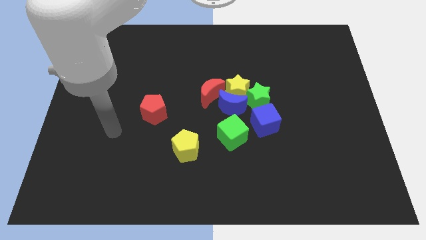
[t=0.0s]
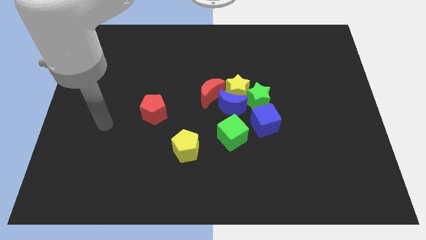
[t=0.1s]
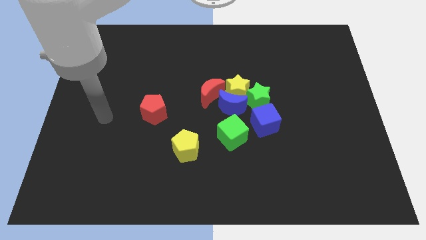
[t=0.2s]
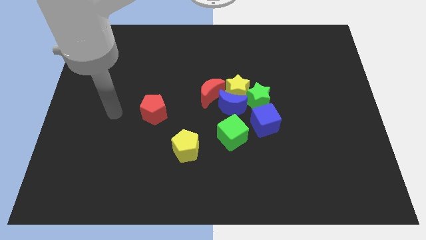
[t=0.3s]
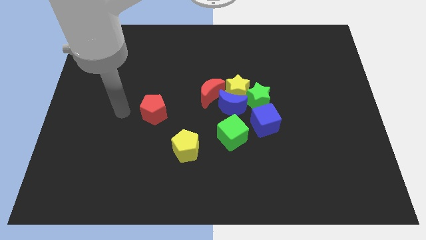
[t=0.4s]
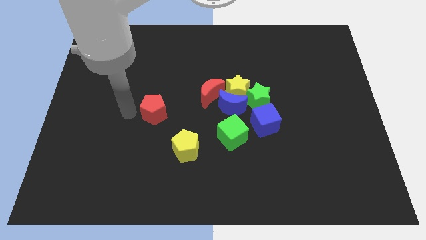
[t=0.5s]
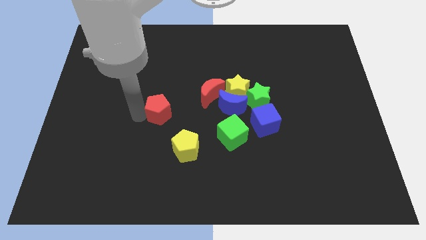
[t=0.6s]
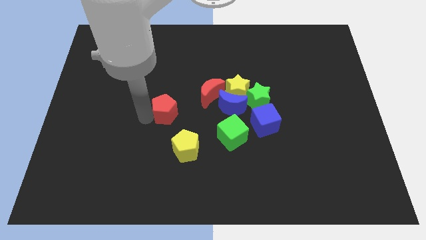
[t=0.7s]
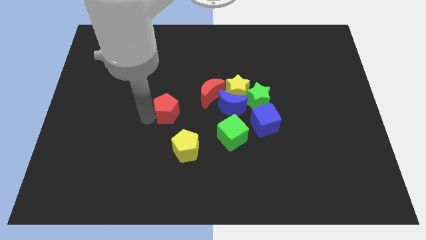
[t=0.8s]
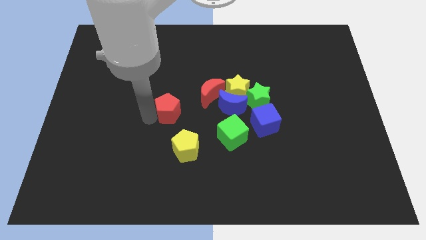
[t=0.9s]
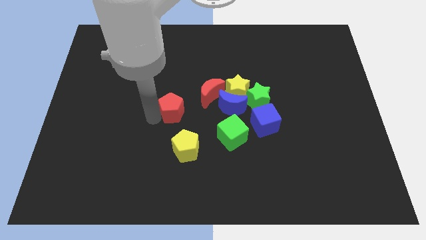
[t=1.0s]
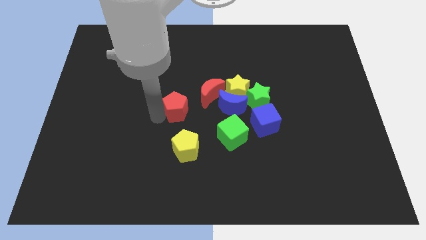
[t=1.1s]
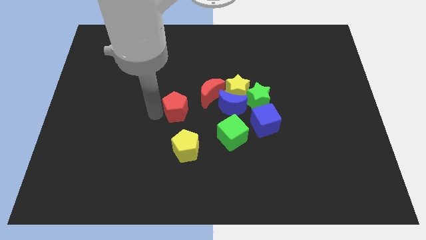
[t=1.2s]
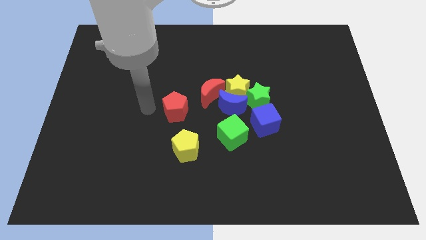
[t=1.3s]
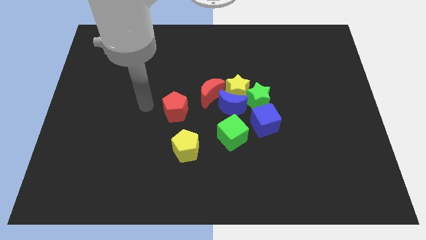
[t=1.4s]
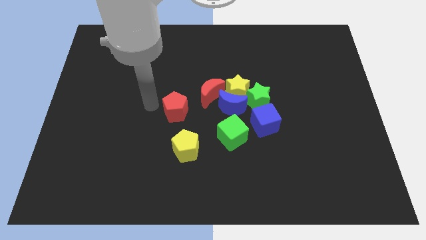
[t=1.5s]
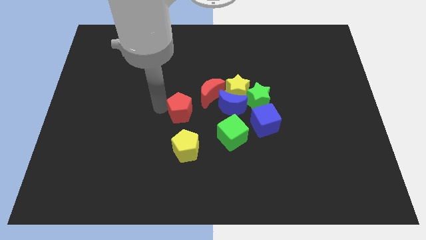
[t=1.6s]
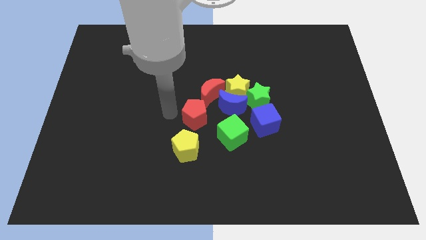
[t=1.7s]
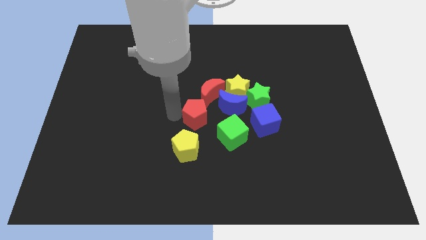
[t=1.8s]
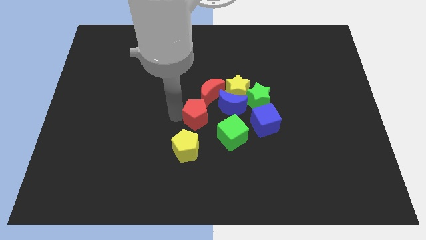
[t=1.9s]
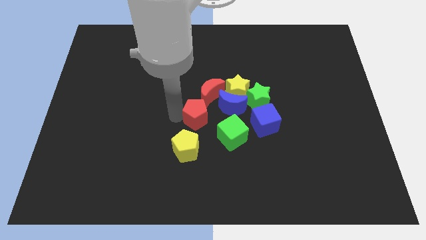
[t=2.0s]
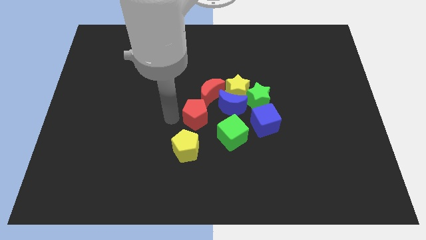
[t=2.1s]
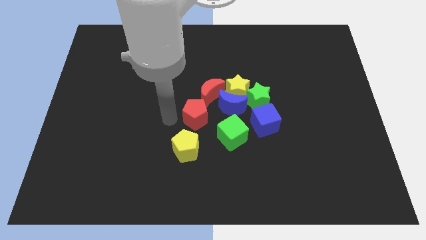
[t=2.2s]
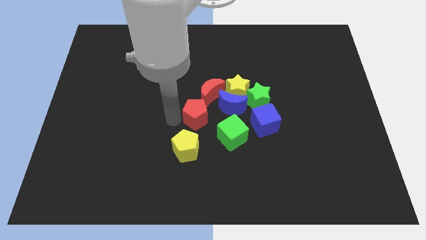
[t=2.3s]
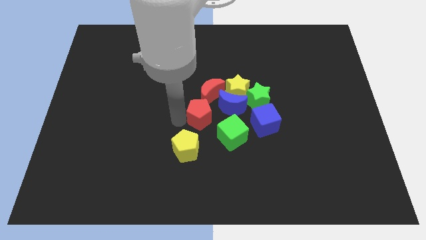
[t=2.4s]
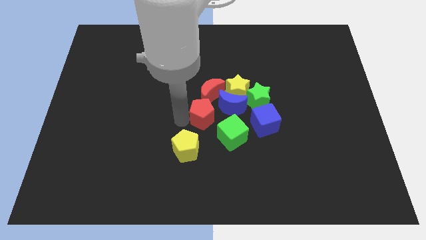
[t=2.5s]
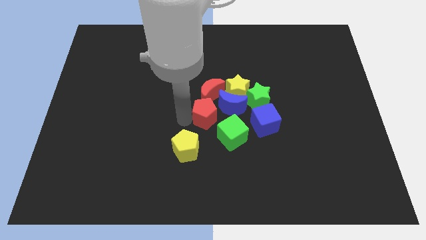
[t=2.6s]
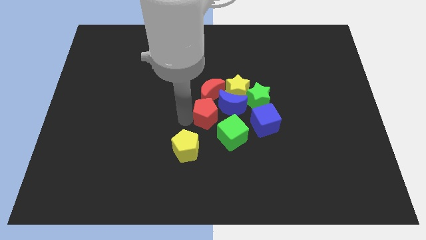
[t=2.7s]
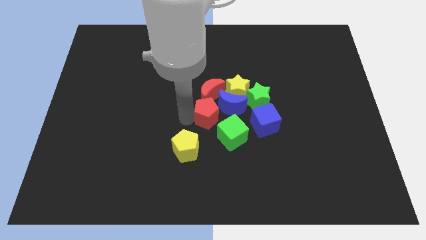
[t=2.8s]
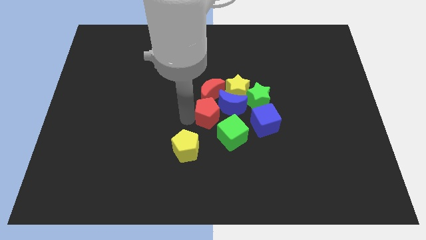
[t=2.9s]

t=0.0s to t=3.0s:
place the red pentagon below the red moon

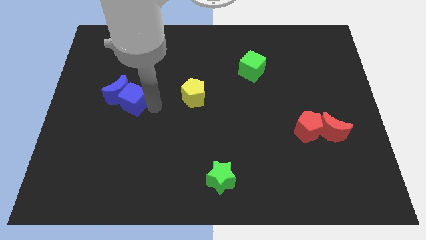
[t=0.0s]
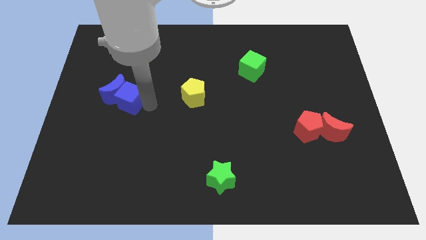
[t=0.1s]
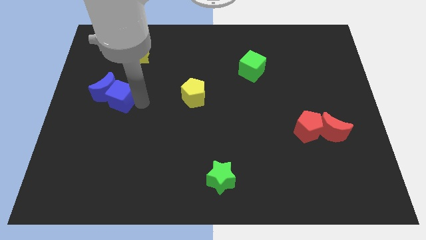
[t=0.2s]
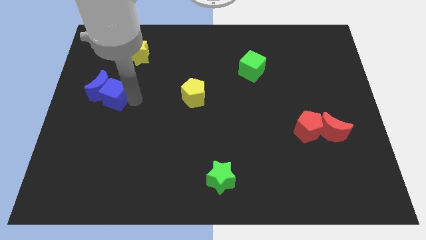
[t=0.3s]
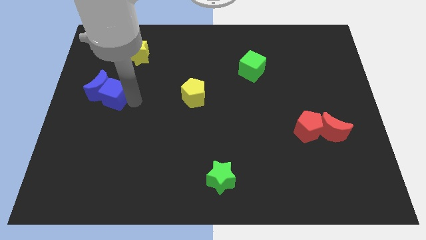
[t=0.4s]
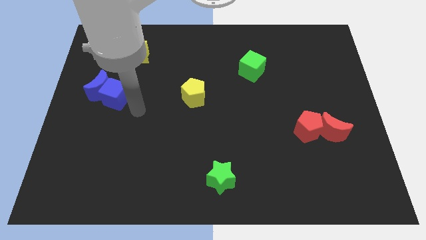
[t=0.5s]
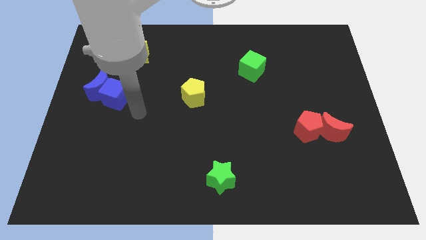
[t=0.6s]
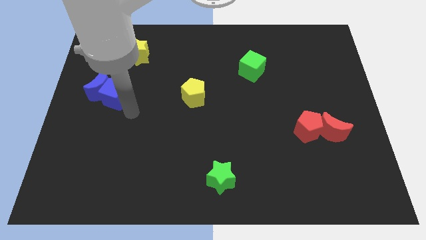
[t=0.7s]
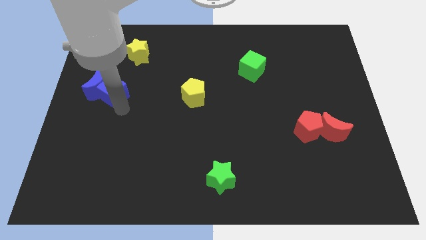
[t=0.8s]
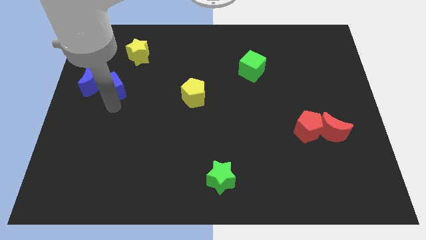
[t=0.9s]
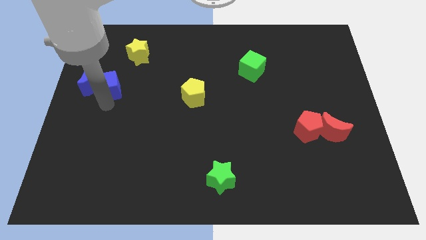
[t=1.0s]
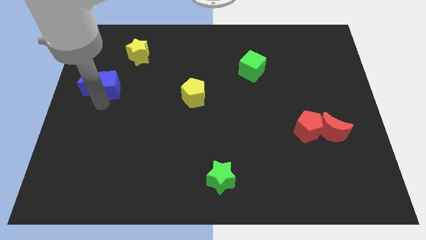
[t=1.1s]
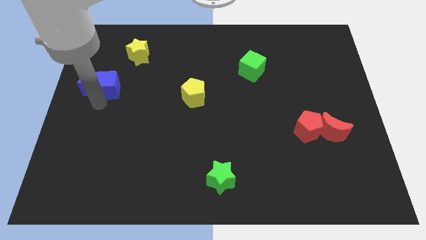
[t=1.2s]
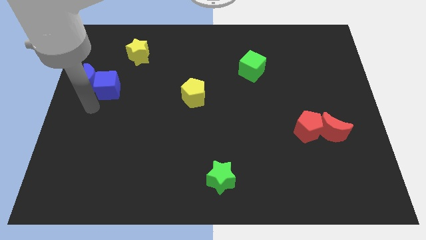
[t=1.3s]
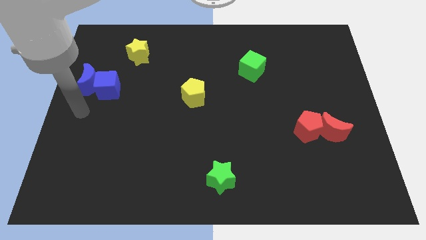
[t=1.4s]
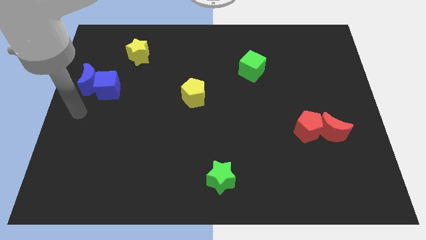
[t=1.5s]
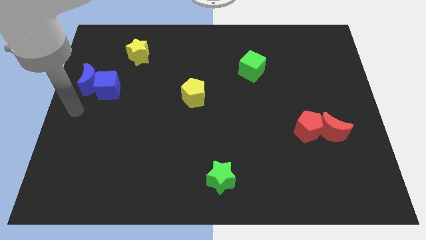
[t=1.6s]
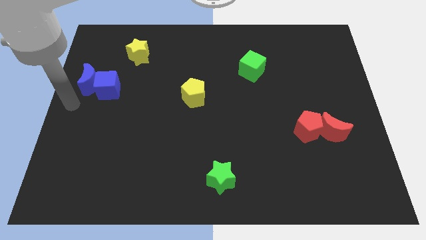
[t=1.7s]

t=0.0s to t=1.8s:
push the blue cube slightly upwards to the top left

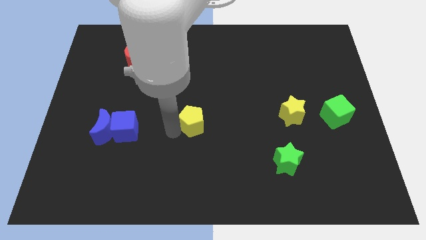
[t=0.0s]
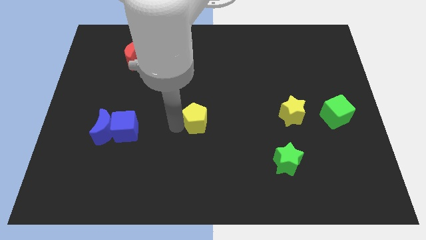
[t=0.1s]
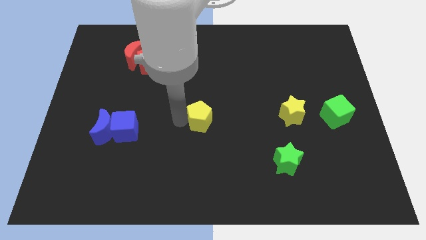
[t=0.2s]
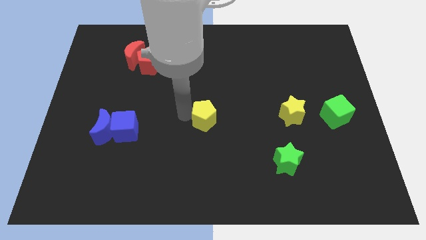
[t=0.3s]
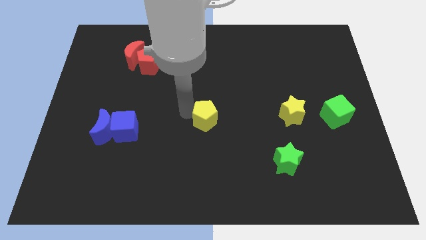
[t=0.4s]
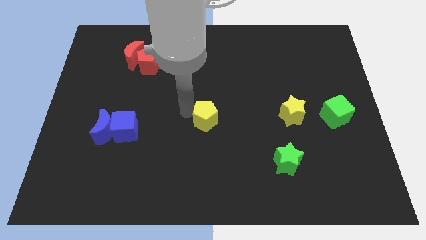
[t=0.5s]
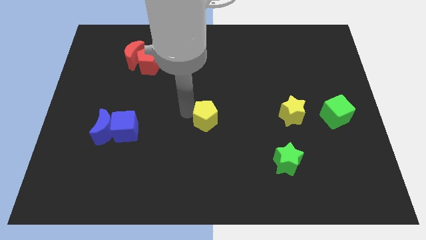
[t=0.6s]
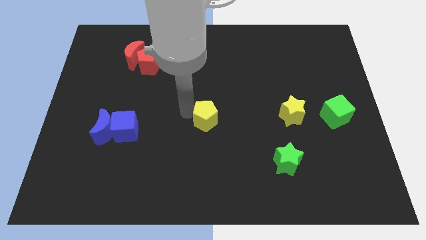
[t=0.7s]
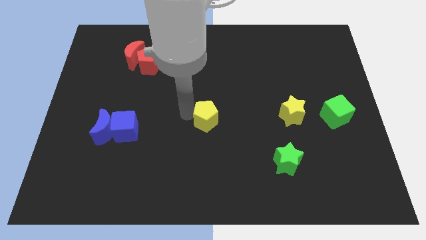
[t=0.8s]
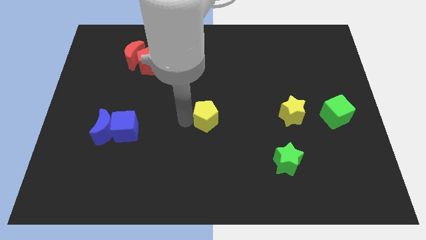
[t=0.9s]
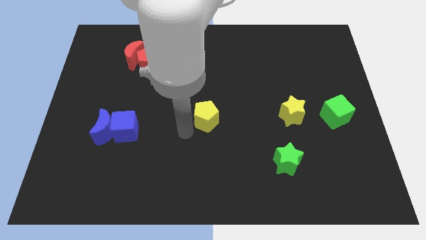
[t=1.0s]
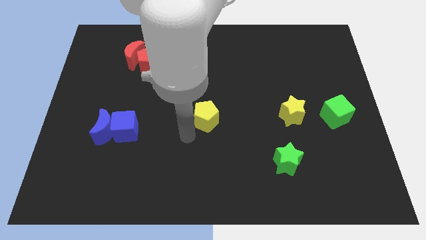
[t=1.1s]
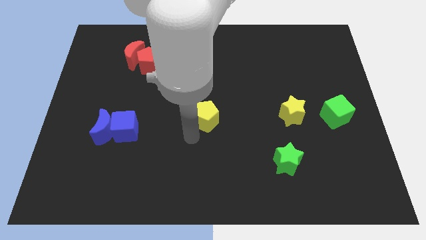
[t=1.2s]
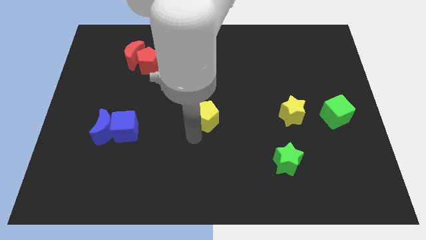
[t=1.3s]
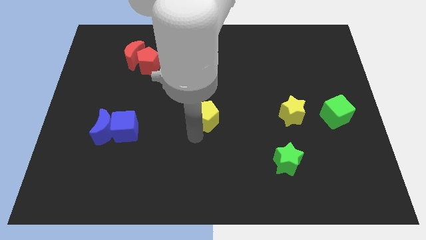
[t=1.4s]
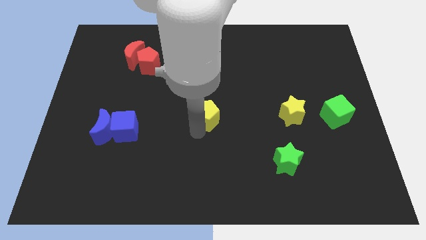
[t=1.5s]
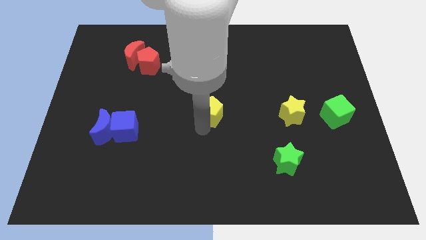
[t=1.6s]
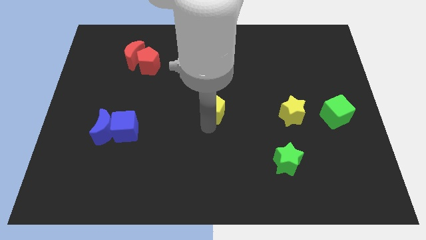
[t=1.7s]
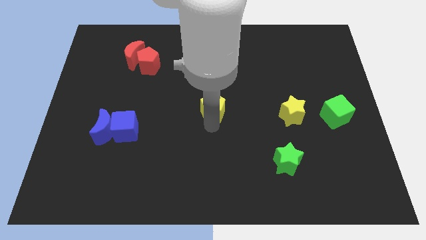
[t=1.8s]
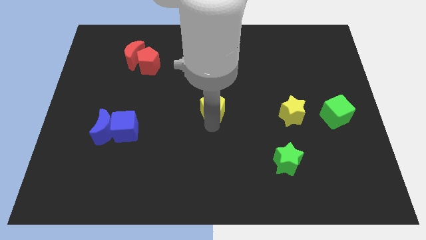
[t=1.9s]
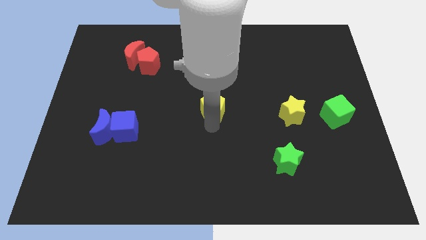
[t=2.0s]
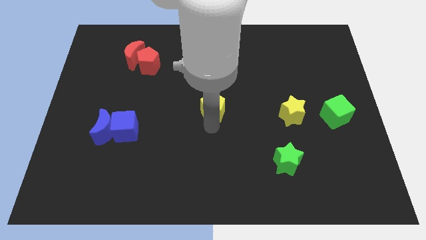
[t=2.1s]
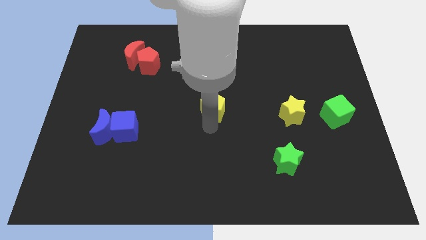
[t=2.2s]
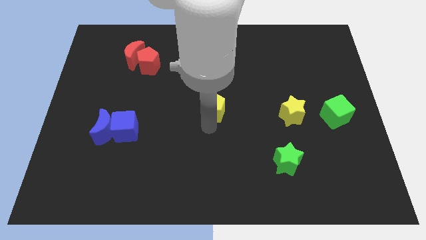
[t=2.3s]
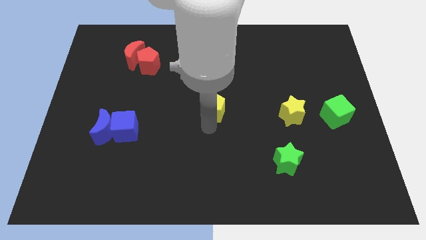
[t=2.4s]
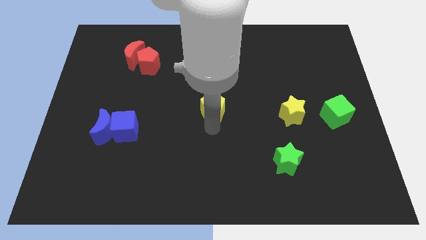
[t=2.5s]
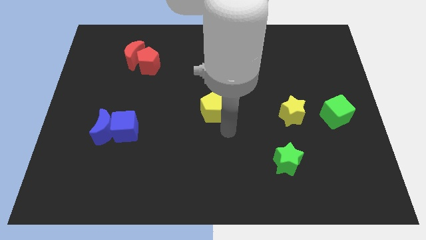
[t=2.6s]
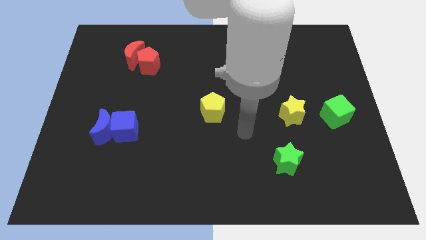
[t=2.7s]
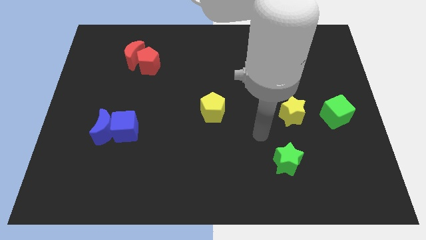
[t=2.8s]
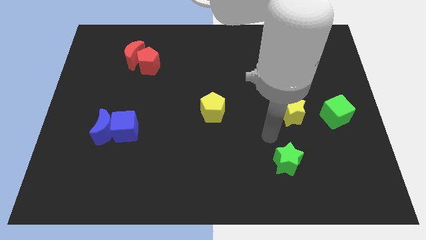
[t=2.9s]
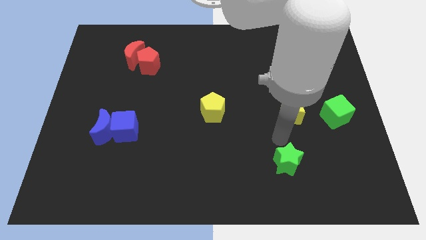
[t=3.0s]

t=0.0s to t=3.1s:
move the yellow pentagon to the center of the board

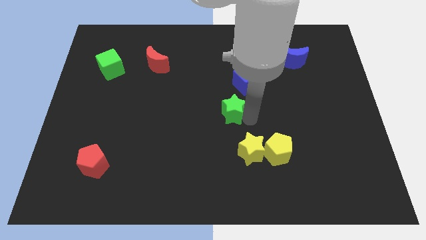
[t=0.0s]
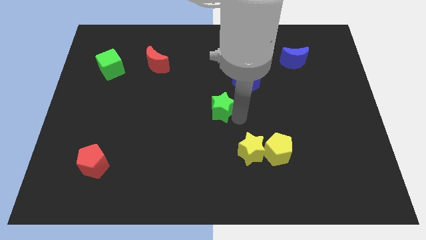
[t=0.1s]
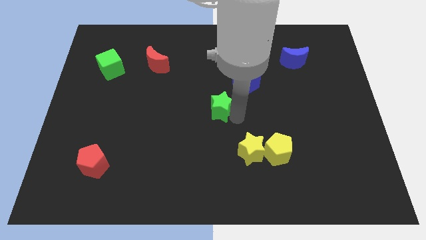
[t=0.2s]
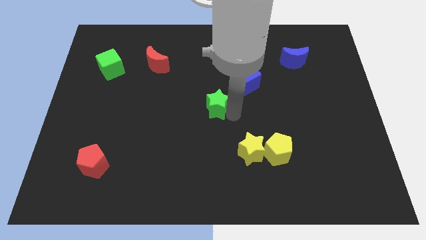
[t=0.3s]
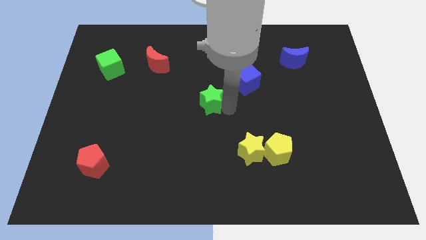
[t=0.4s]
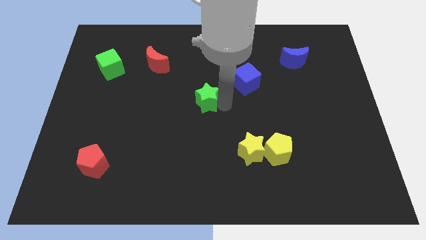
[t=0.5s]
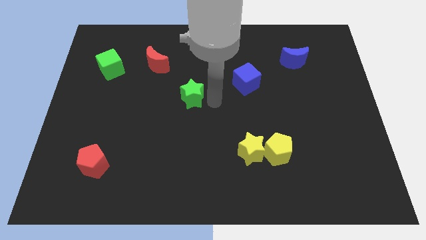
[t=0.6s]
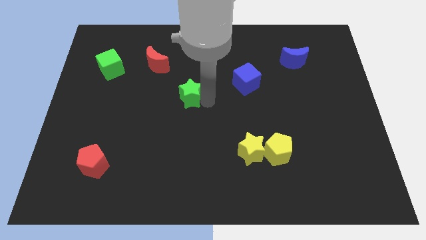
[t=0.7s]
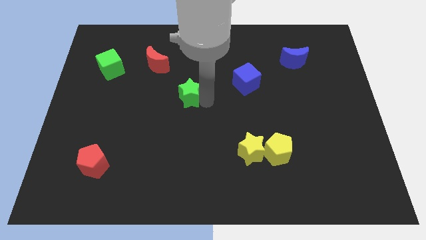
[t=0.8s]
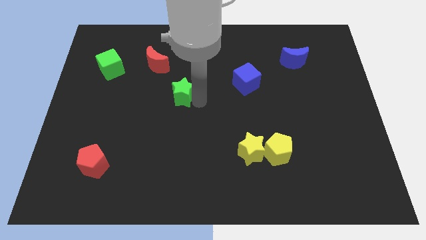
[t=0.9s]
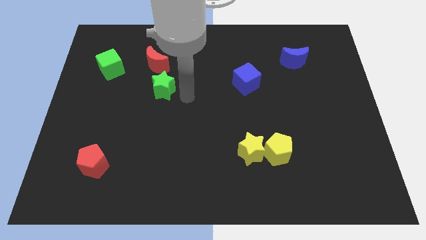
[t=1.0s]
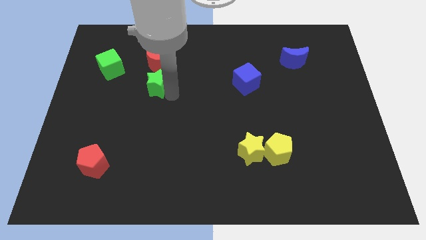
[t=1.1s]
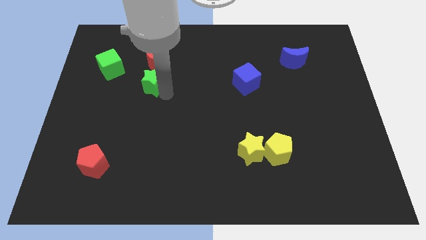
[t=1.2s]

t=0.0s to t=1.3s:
place the green star underneath the red moon
